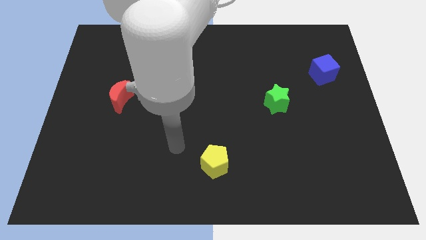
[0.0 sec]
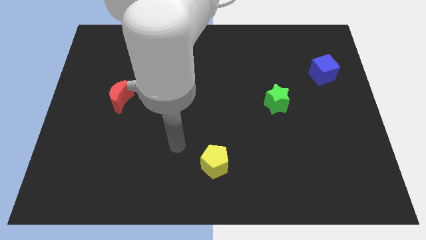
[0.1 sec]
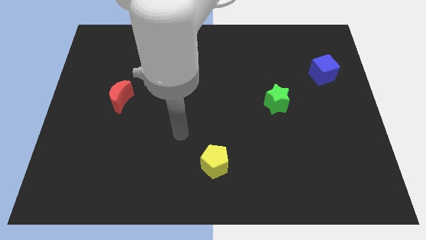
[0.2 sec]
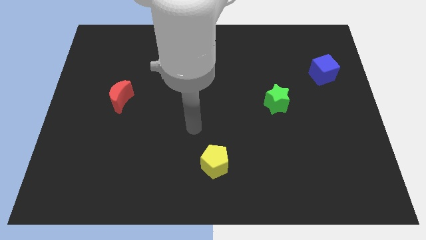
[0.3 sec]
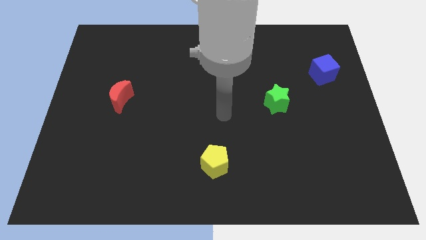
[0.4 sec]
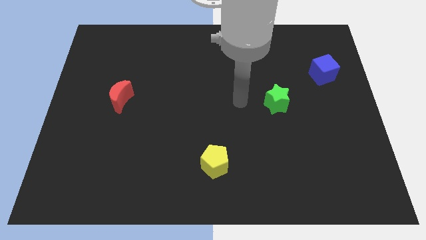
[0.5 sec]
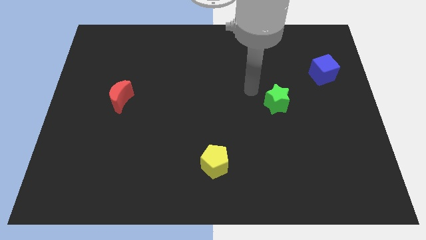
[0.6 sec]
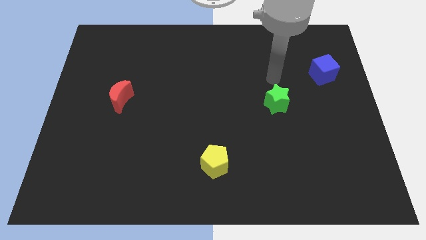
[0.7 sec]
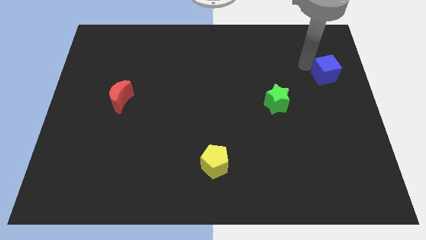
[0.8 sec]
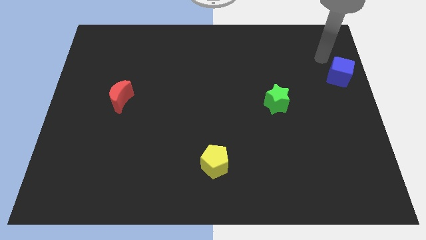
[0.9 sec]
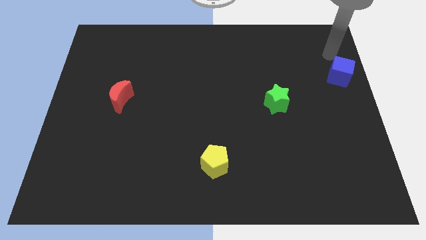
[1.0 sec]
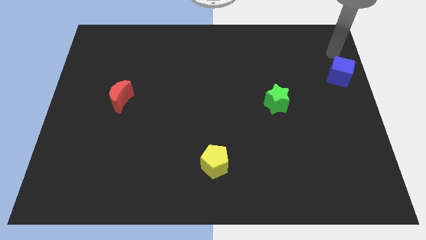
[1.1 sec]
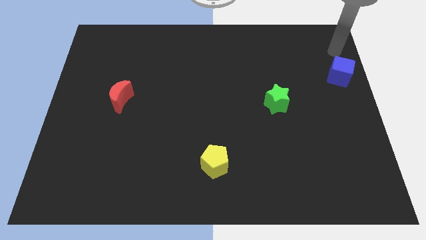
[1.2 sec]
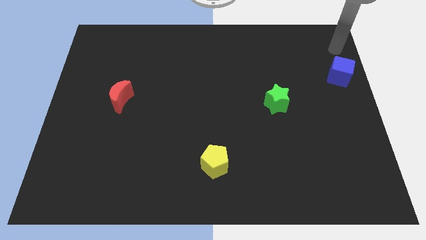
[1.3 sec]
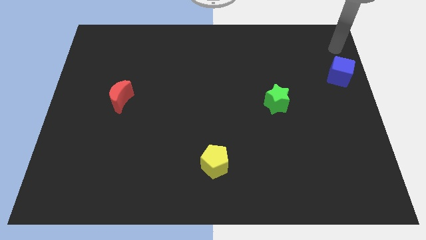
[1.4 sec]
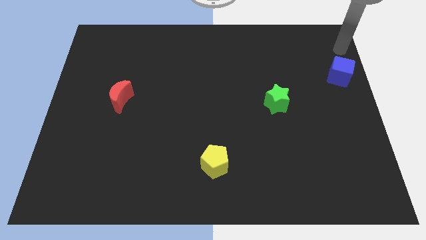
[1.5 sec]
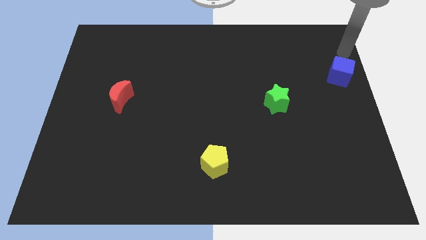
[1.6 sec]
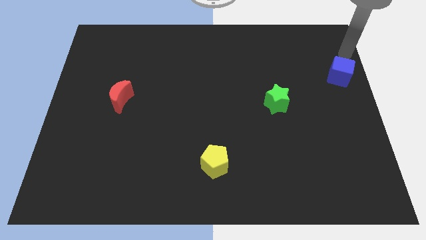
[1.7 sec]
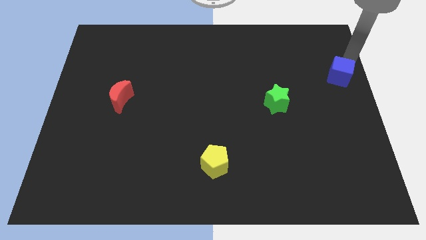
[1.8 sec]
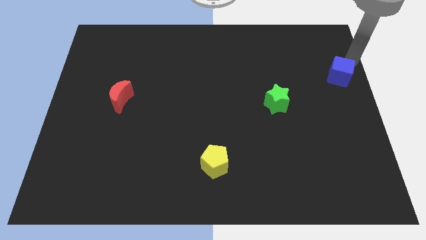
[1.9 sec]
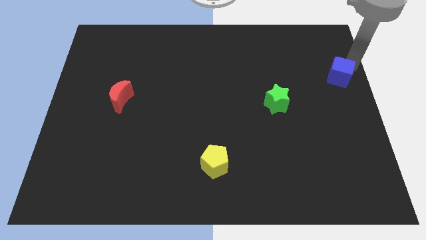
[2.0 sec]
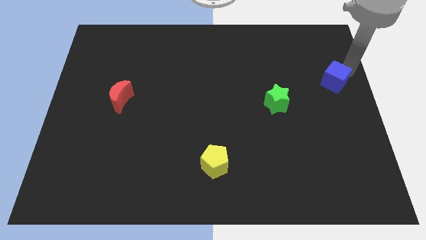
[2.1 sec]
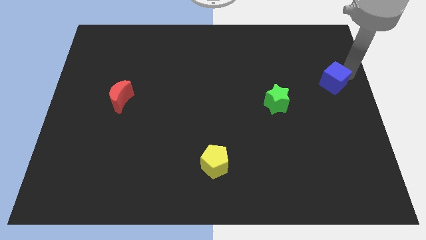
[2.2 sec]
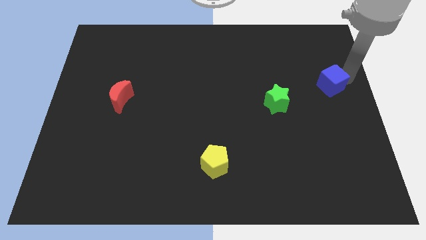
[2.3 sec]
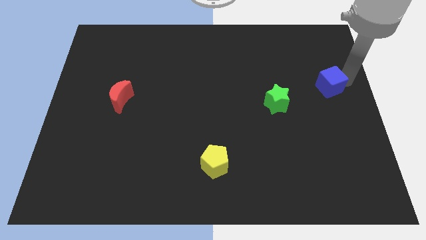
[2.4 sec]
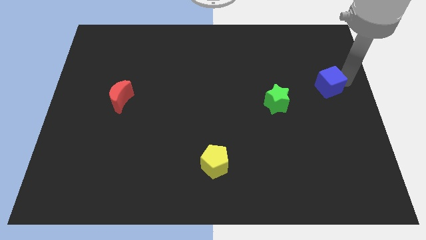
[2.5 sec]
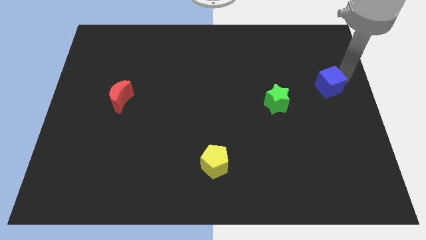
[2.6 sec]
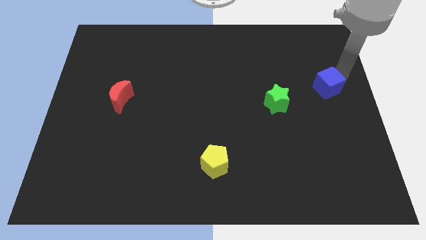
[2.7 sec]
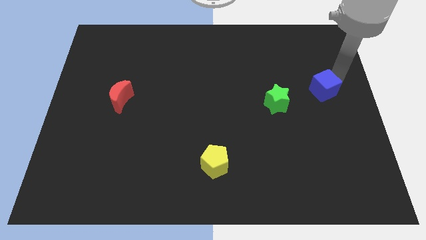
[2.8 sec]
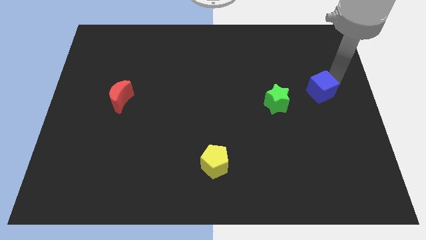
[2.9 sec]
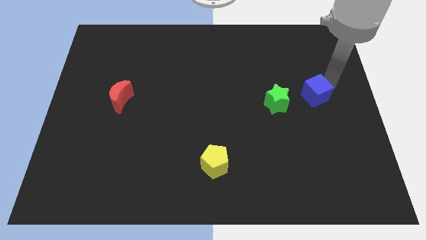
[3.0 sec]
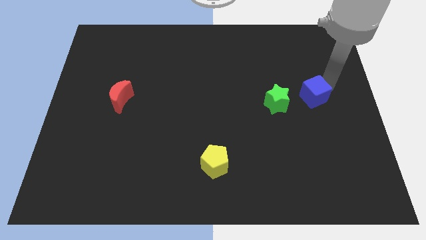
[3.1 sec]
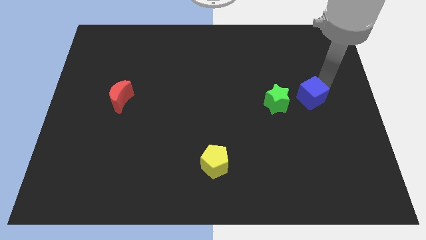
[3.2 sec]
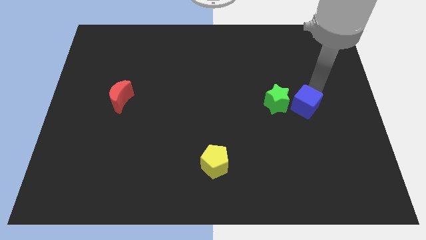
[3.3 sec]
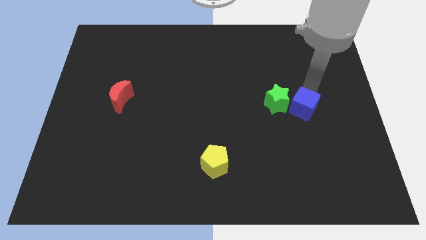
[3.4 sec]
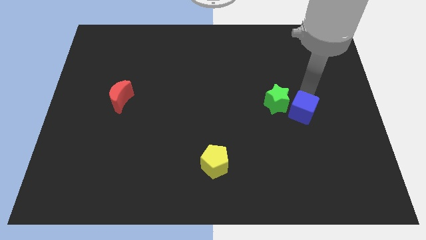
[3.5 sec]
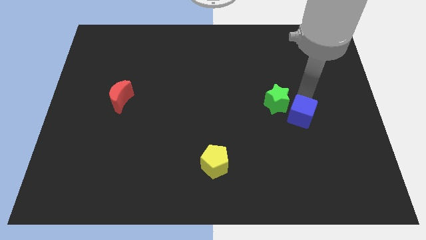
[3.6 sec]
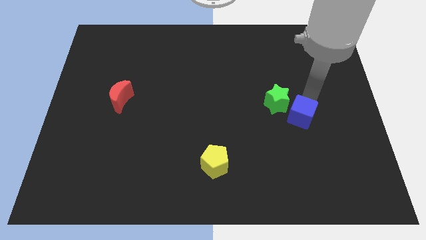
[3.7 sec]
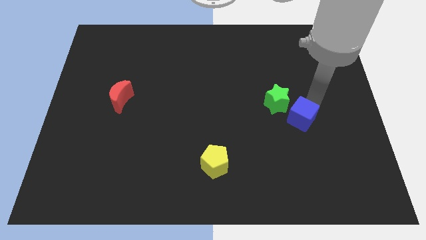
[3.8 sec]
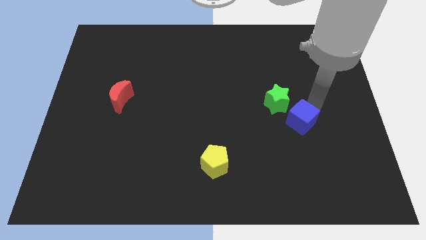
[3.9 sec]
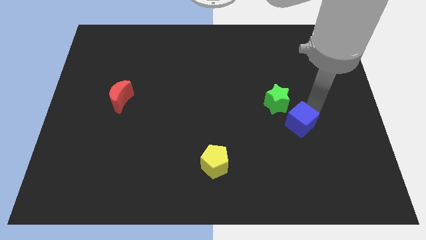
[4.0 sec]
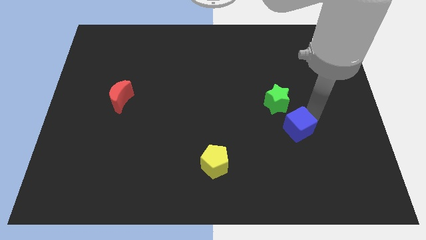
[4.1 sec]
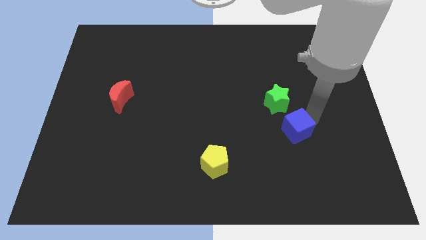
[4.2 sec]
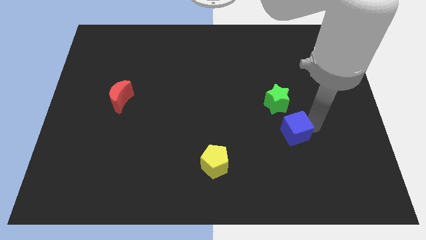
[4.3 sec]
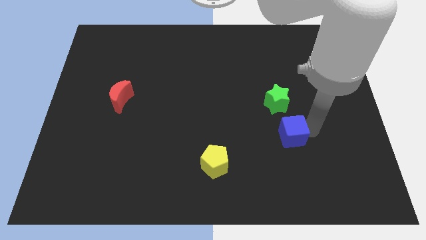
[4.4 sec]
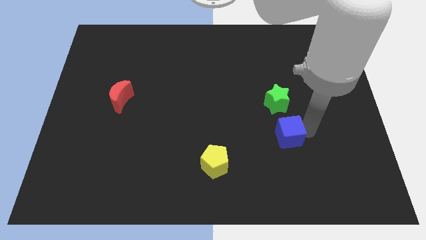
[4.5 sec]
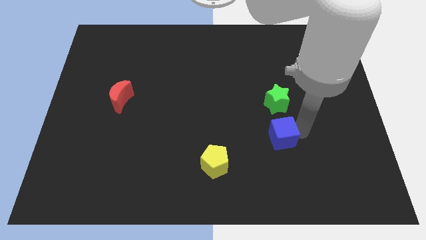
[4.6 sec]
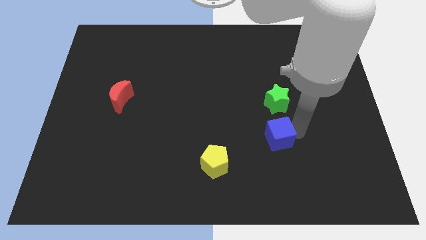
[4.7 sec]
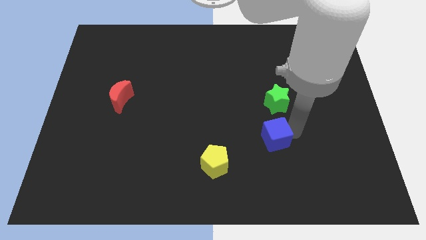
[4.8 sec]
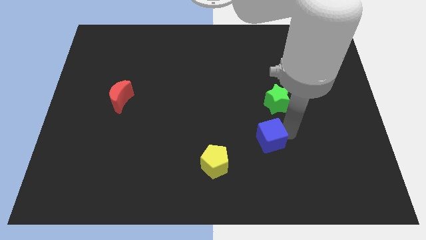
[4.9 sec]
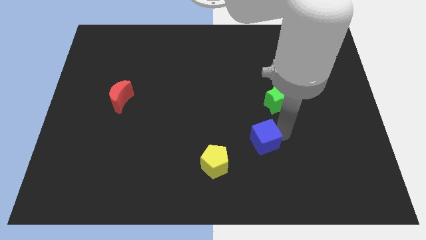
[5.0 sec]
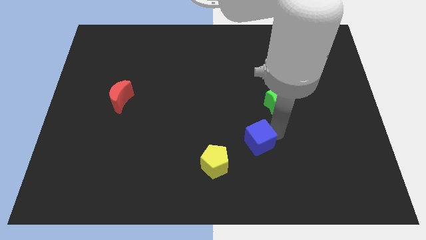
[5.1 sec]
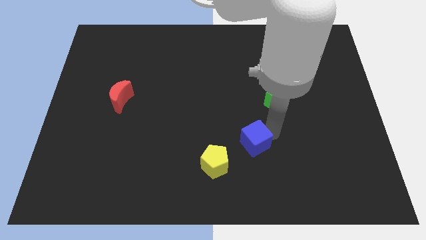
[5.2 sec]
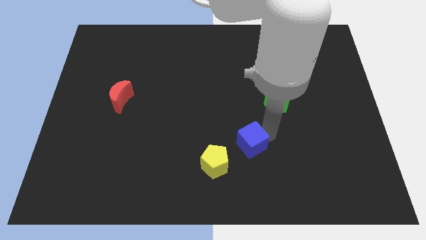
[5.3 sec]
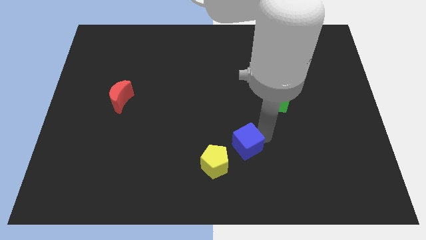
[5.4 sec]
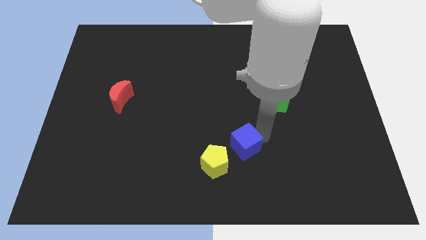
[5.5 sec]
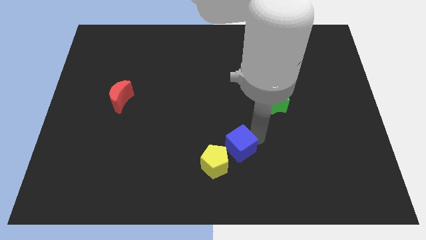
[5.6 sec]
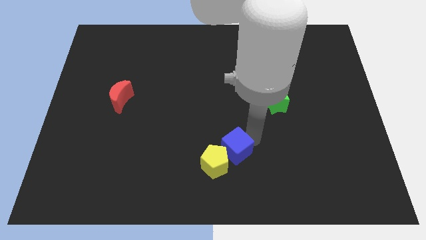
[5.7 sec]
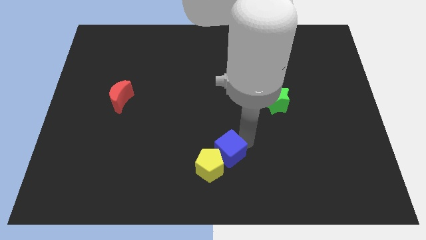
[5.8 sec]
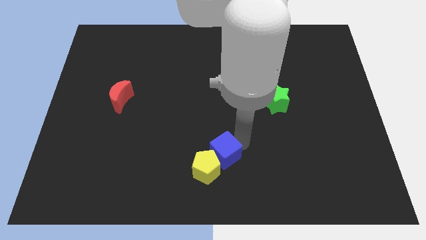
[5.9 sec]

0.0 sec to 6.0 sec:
push the blue cube towards the pentagon

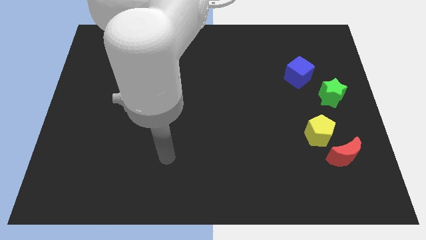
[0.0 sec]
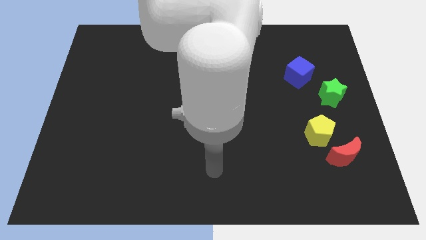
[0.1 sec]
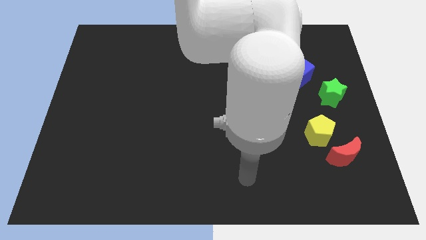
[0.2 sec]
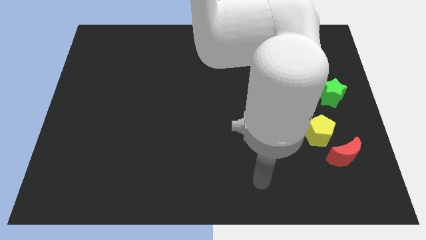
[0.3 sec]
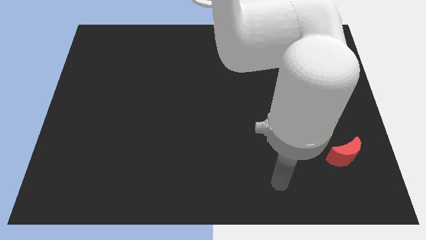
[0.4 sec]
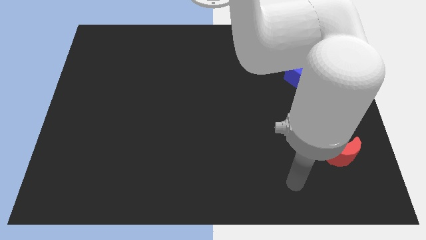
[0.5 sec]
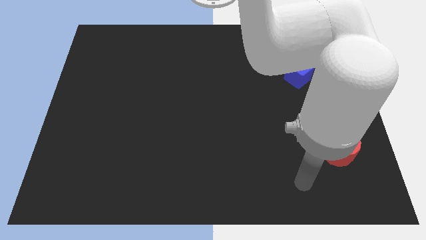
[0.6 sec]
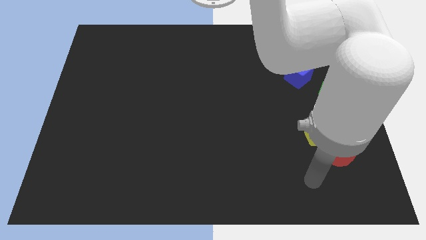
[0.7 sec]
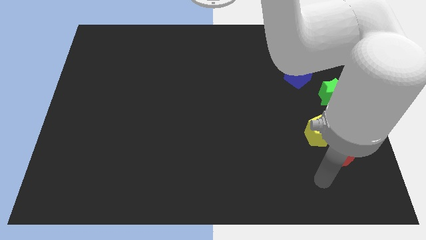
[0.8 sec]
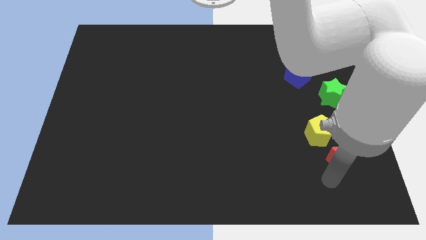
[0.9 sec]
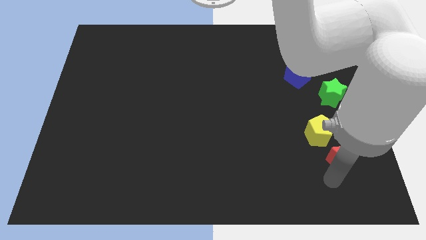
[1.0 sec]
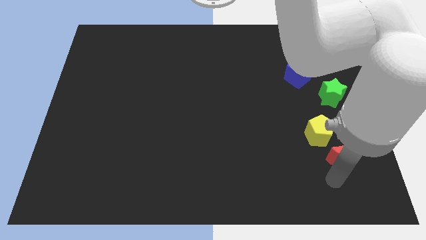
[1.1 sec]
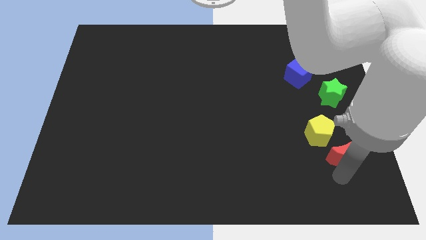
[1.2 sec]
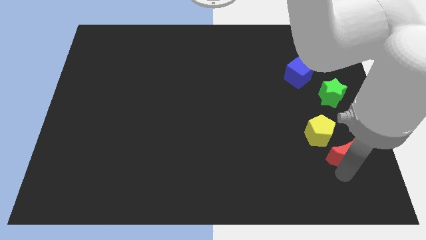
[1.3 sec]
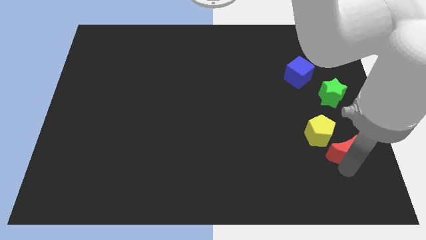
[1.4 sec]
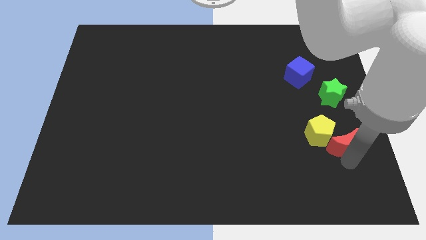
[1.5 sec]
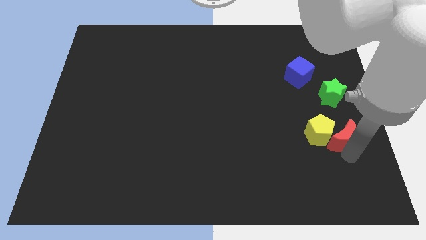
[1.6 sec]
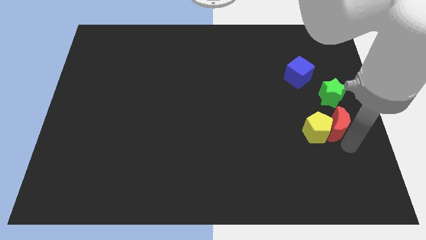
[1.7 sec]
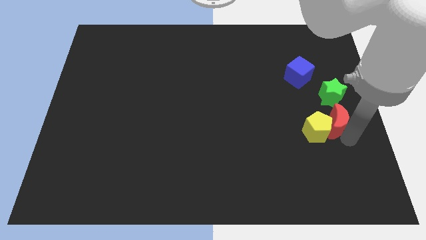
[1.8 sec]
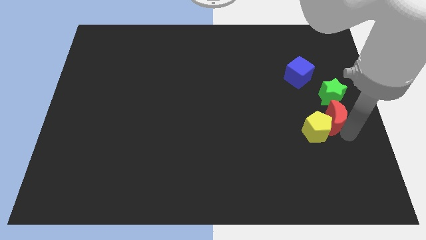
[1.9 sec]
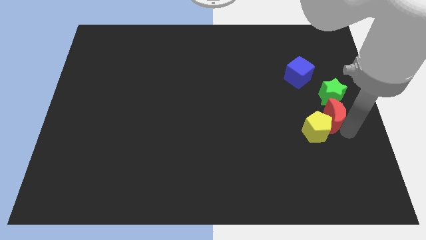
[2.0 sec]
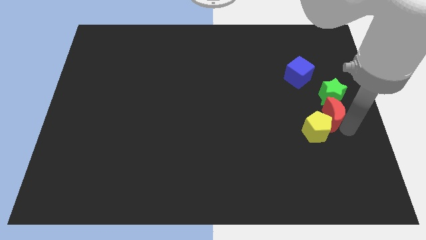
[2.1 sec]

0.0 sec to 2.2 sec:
slide the red moon next to the green star

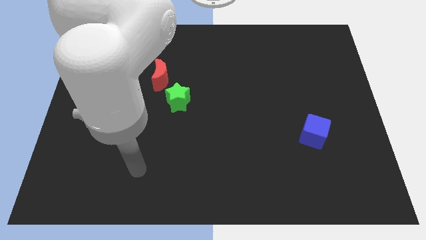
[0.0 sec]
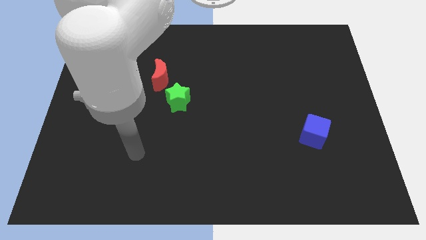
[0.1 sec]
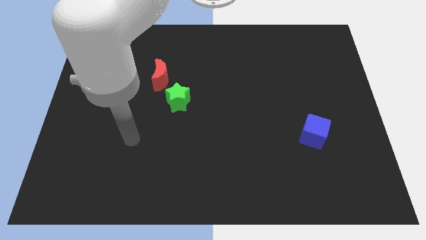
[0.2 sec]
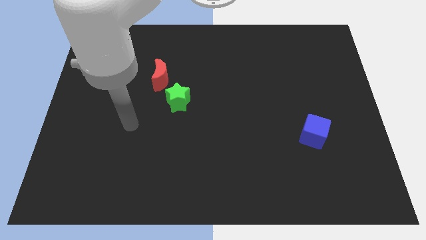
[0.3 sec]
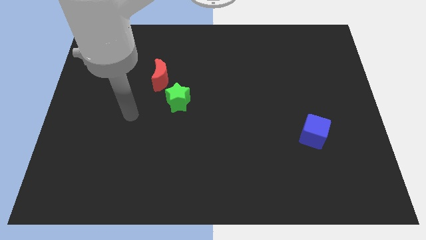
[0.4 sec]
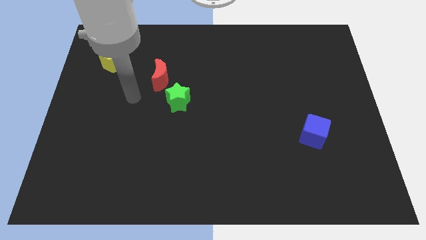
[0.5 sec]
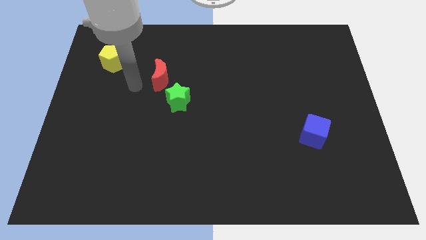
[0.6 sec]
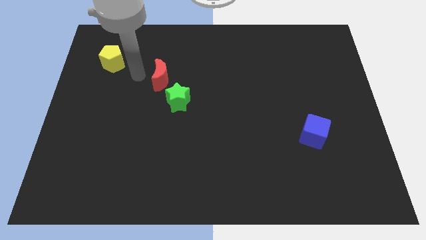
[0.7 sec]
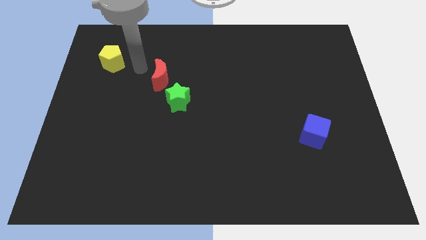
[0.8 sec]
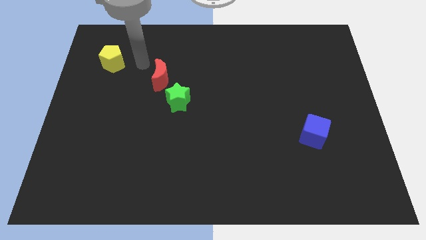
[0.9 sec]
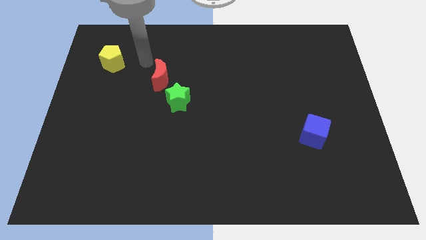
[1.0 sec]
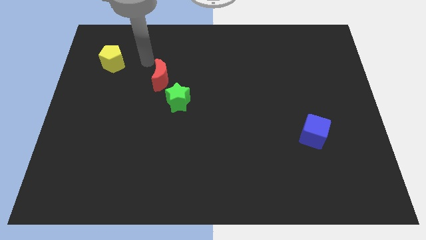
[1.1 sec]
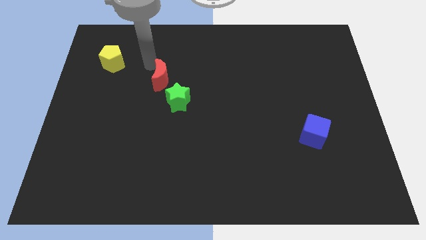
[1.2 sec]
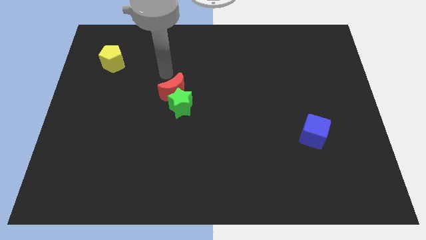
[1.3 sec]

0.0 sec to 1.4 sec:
move the red moon towards the star
